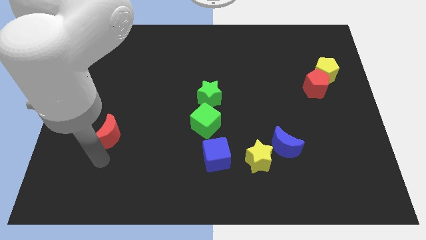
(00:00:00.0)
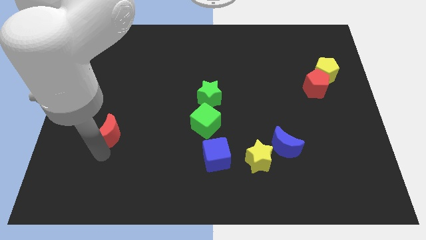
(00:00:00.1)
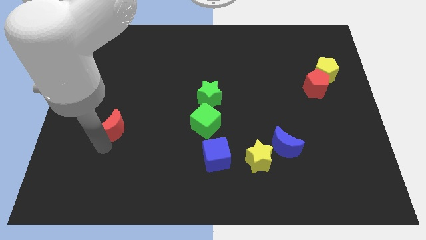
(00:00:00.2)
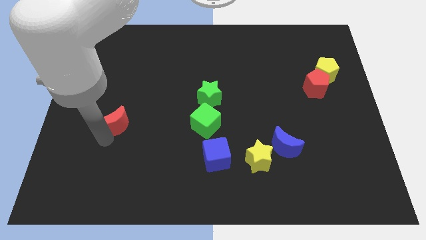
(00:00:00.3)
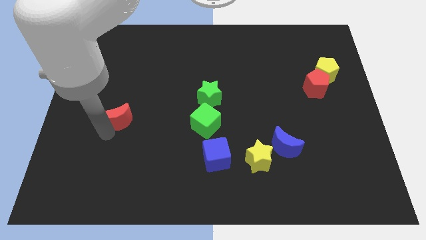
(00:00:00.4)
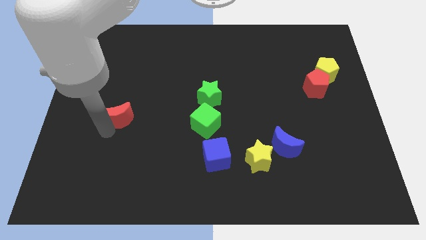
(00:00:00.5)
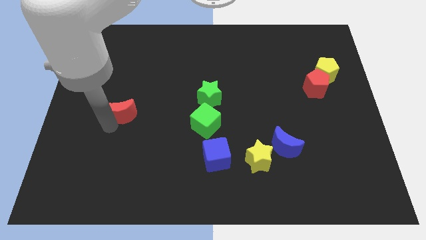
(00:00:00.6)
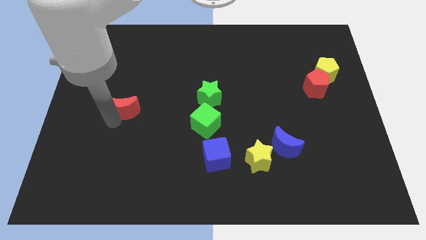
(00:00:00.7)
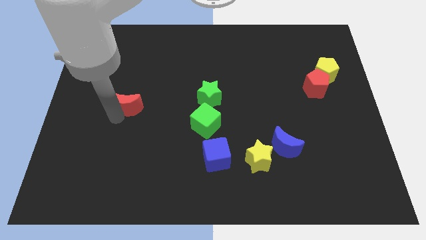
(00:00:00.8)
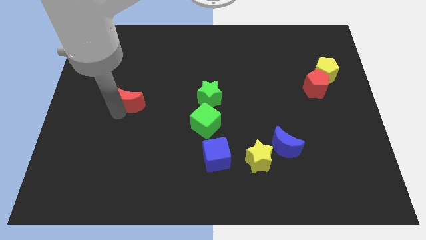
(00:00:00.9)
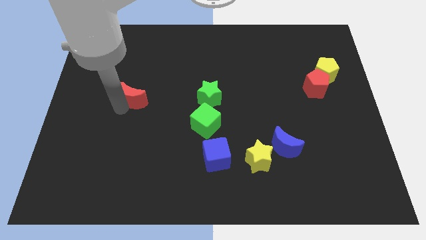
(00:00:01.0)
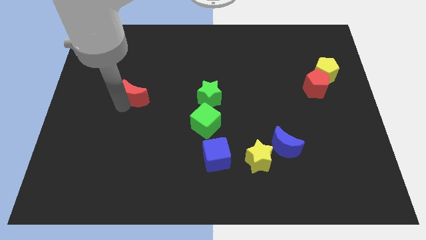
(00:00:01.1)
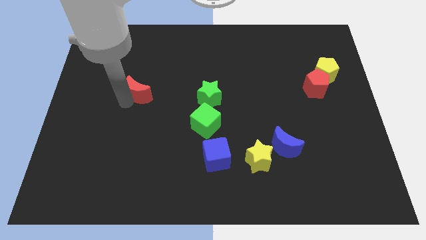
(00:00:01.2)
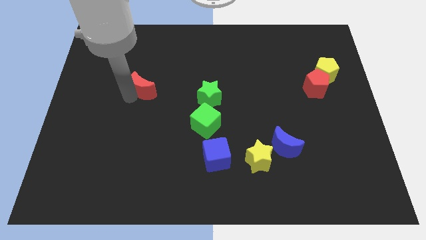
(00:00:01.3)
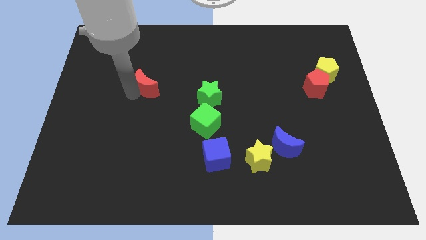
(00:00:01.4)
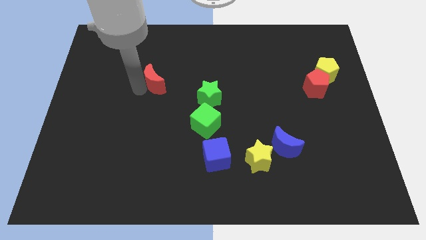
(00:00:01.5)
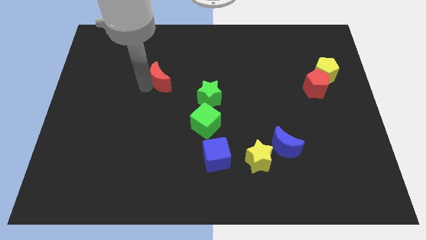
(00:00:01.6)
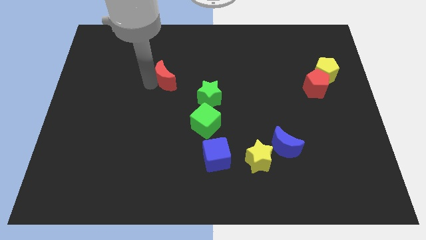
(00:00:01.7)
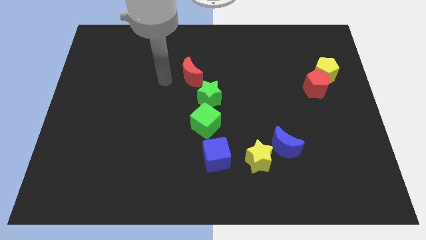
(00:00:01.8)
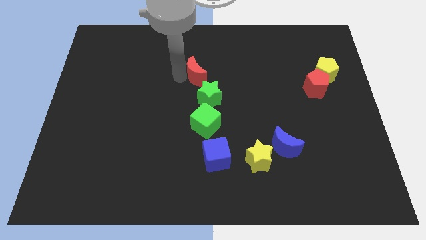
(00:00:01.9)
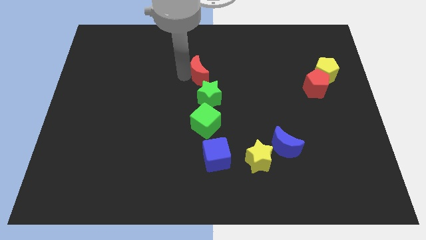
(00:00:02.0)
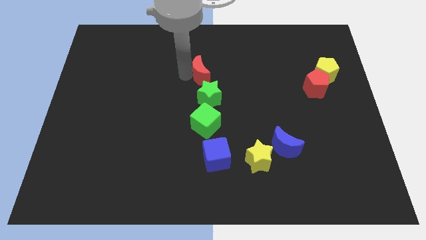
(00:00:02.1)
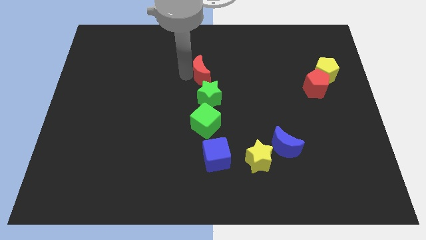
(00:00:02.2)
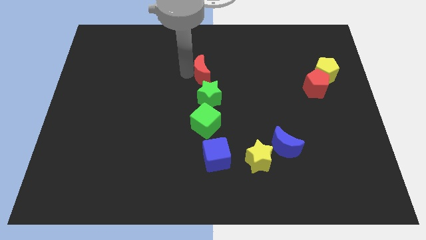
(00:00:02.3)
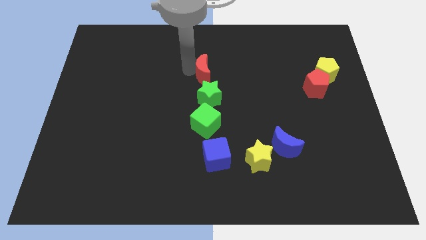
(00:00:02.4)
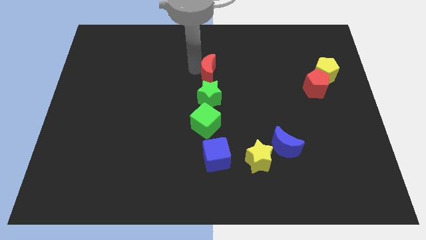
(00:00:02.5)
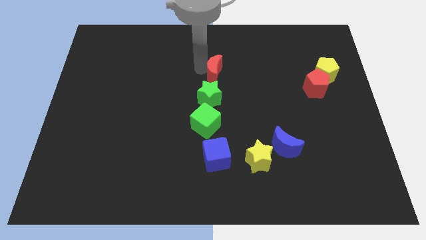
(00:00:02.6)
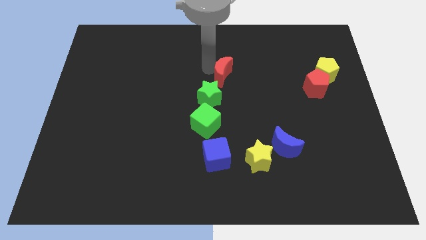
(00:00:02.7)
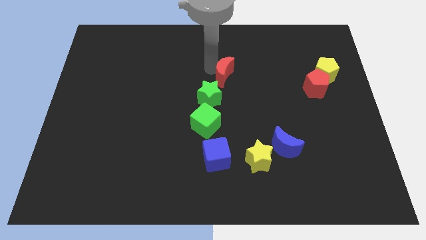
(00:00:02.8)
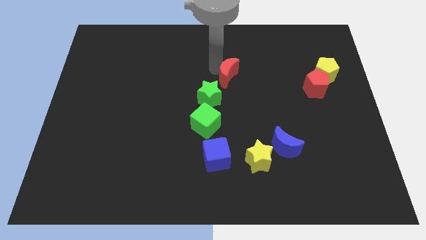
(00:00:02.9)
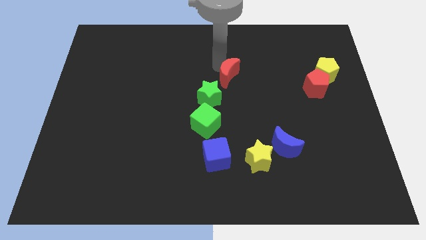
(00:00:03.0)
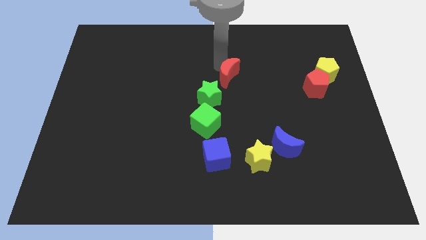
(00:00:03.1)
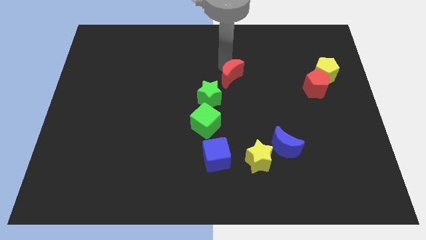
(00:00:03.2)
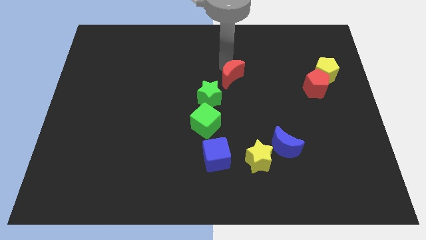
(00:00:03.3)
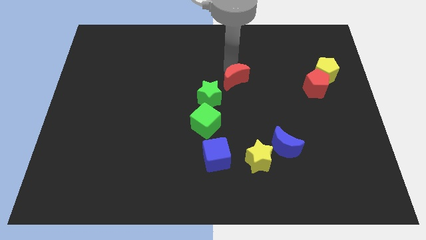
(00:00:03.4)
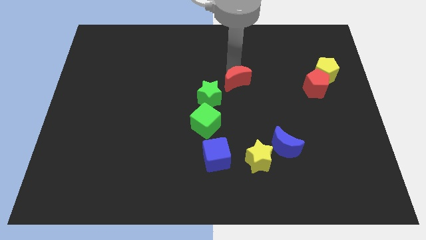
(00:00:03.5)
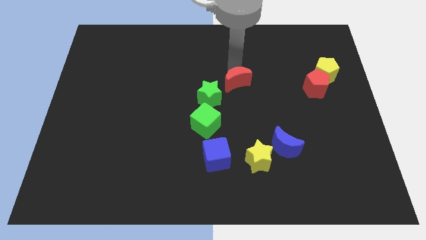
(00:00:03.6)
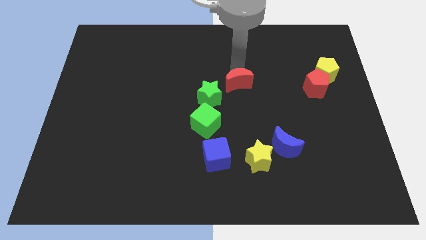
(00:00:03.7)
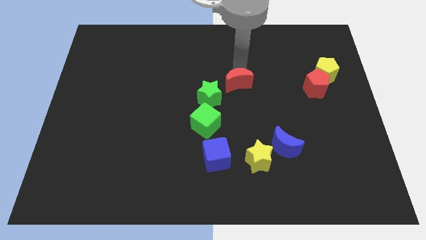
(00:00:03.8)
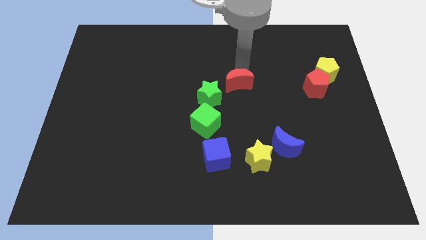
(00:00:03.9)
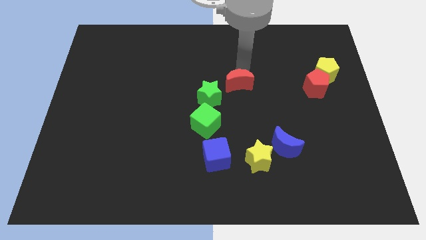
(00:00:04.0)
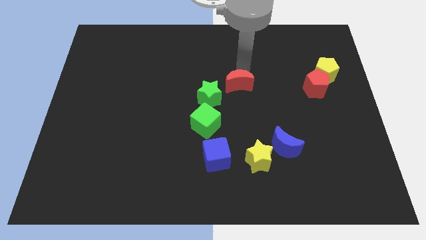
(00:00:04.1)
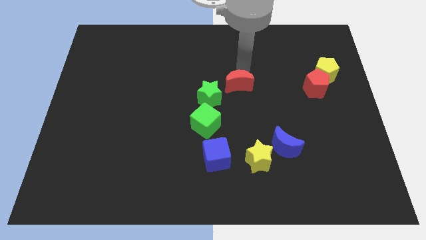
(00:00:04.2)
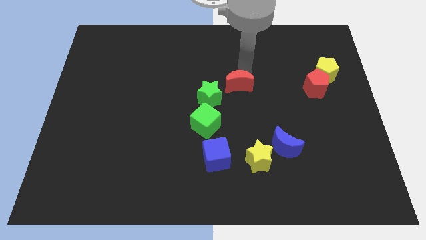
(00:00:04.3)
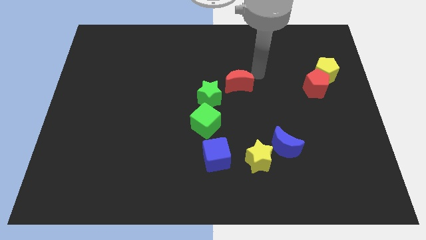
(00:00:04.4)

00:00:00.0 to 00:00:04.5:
place the red crescent to the right of green star

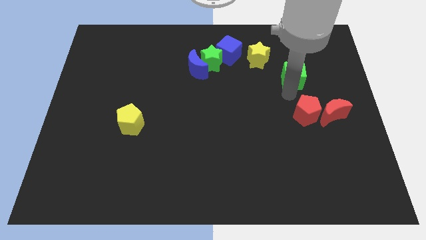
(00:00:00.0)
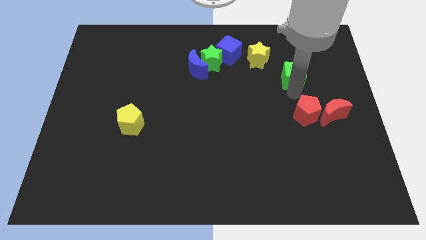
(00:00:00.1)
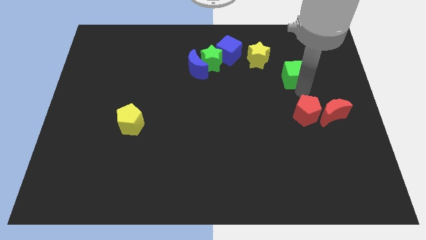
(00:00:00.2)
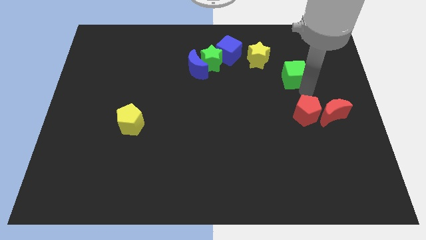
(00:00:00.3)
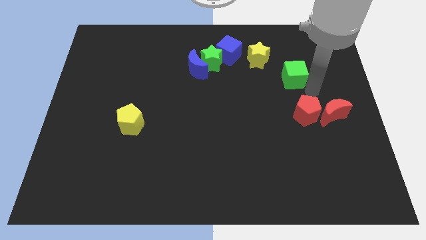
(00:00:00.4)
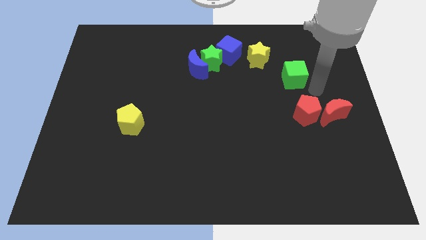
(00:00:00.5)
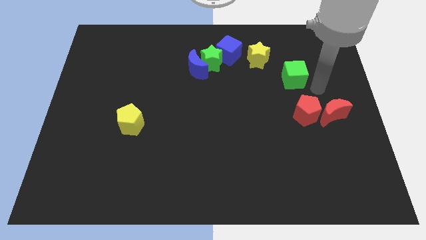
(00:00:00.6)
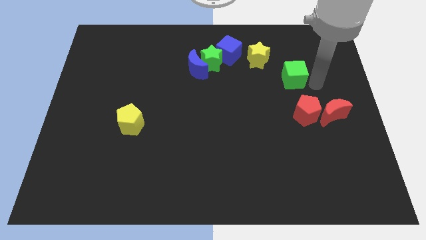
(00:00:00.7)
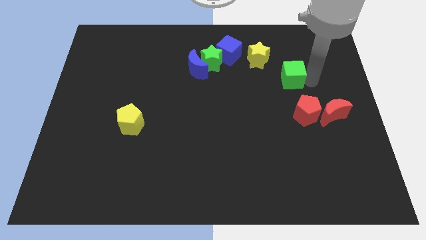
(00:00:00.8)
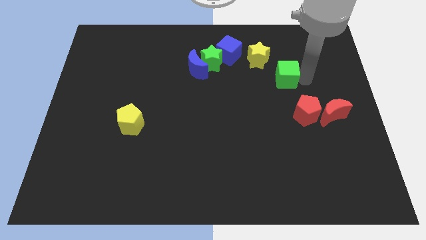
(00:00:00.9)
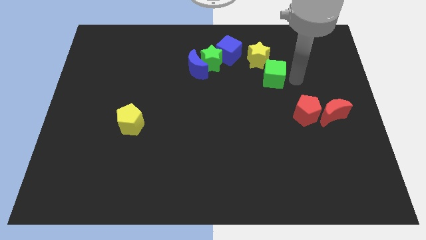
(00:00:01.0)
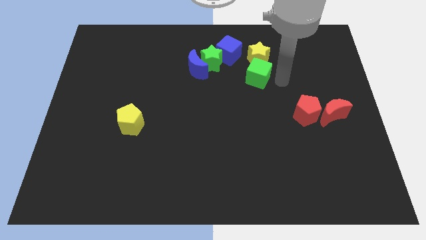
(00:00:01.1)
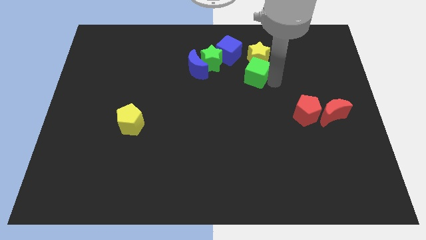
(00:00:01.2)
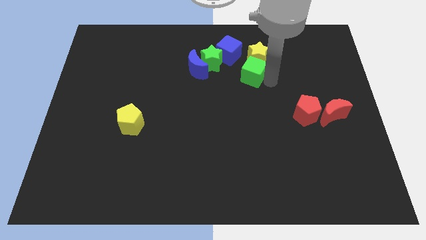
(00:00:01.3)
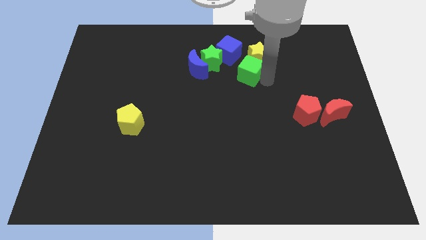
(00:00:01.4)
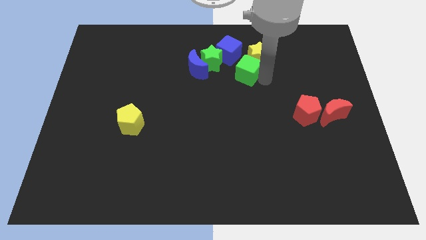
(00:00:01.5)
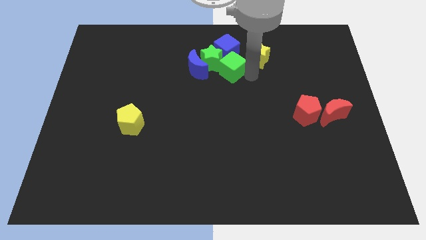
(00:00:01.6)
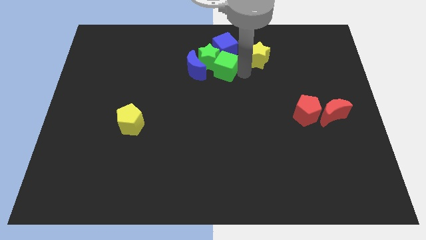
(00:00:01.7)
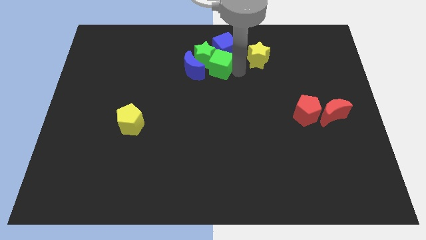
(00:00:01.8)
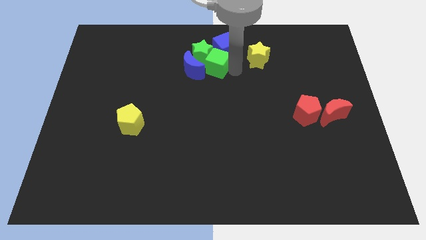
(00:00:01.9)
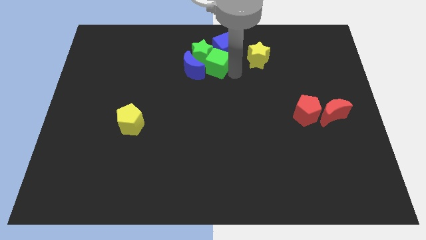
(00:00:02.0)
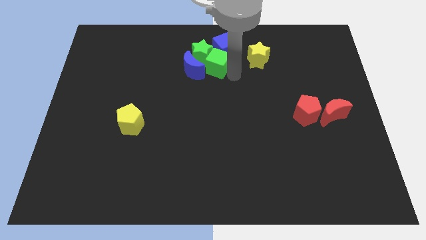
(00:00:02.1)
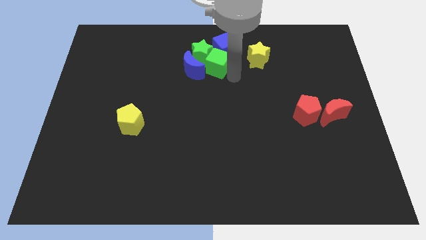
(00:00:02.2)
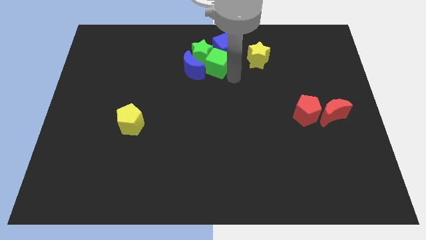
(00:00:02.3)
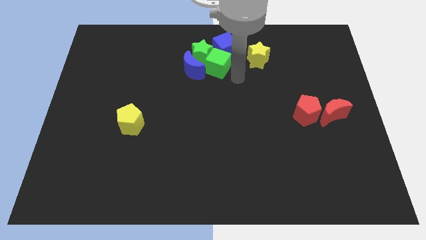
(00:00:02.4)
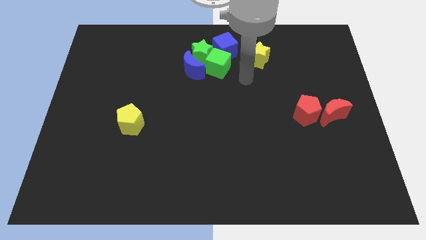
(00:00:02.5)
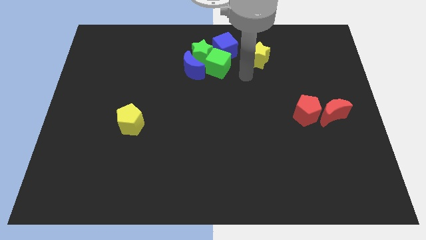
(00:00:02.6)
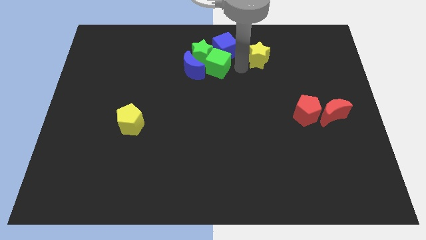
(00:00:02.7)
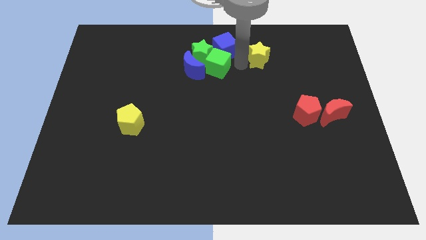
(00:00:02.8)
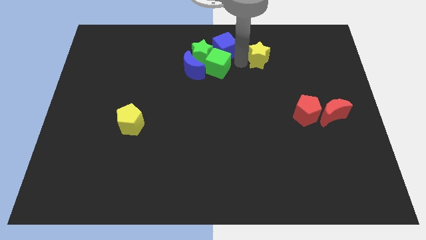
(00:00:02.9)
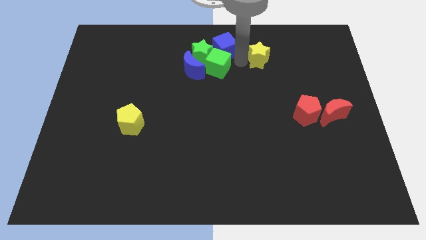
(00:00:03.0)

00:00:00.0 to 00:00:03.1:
push green cube into green star

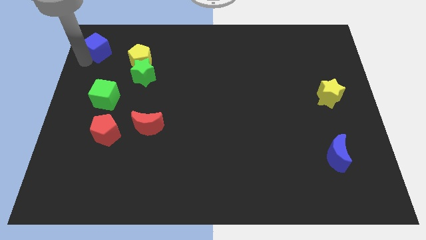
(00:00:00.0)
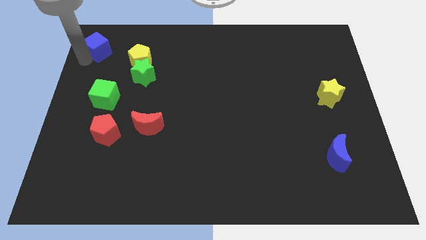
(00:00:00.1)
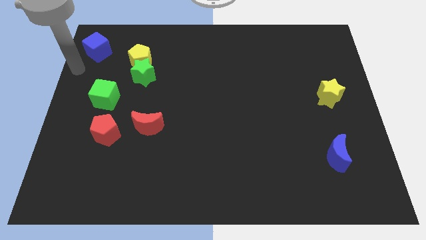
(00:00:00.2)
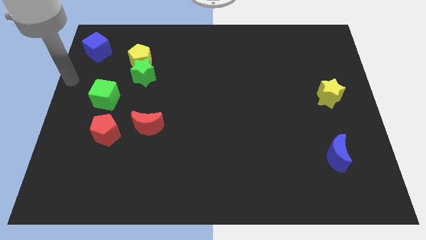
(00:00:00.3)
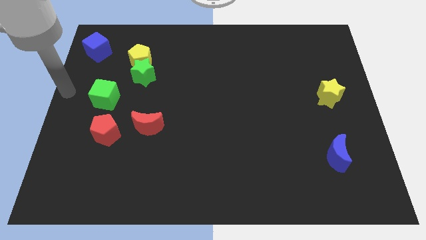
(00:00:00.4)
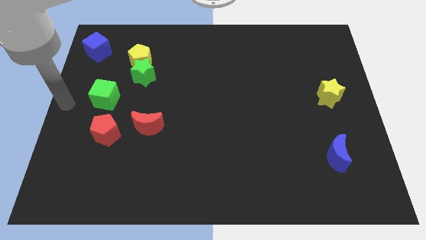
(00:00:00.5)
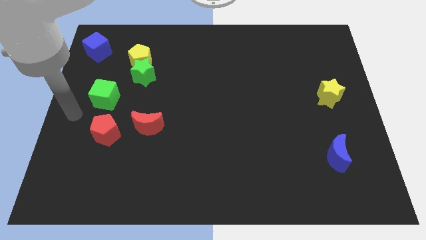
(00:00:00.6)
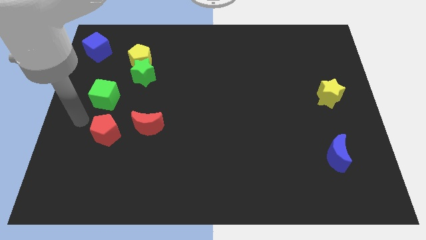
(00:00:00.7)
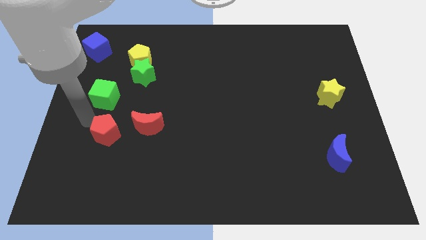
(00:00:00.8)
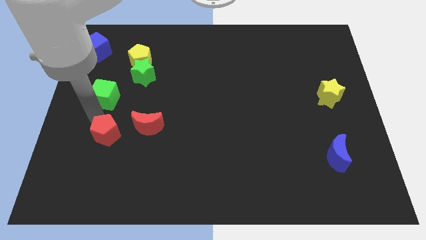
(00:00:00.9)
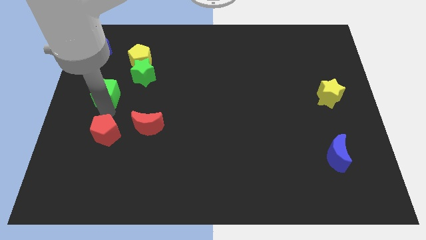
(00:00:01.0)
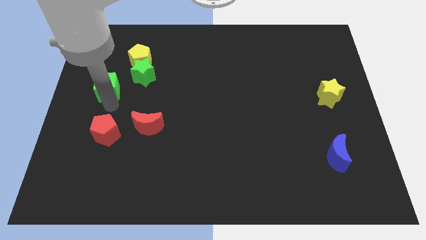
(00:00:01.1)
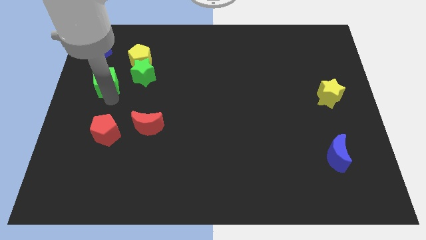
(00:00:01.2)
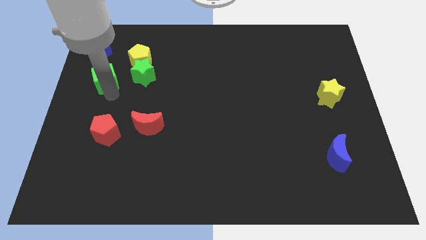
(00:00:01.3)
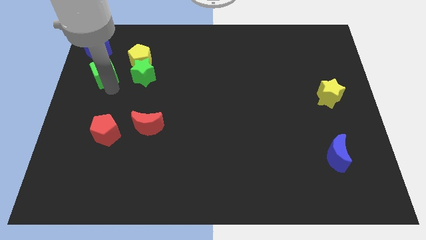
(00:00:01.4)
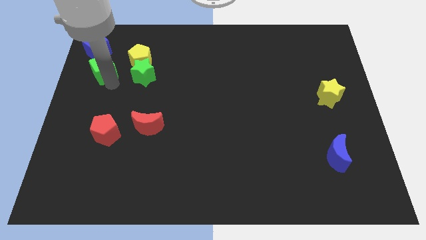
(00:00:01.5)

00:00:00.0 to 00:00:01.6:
place the green cube left to the green star
